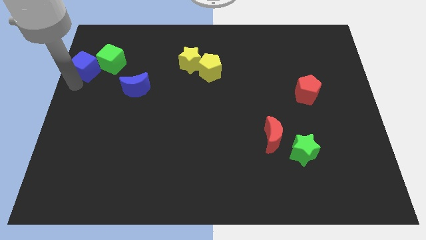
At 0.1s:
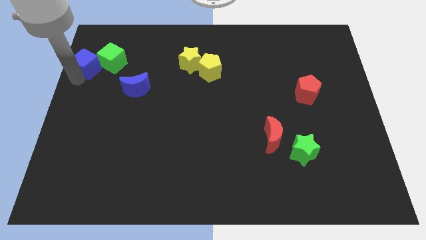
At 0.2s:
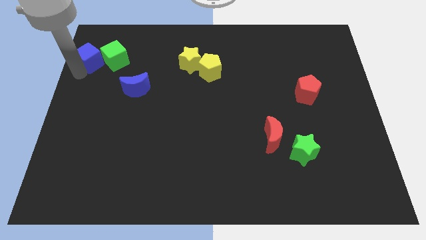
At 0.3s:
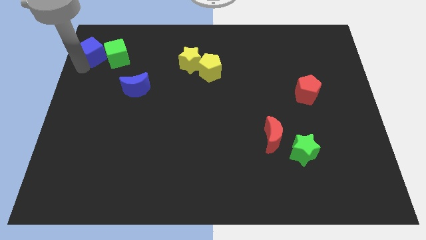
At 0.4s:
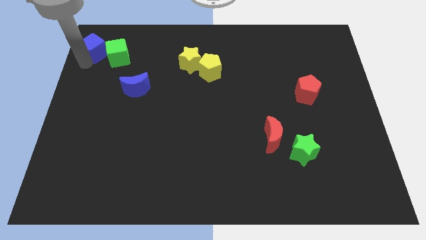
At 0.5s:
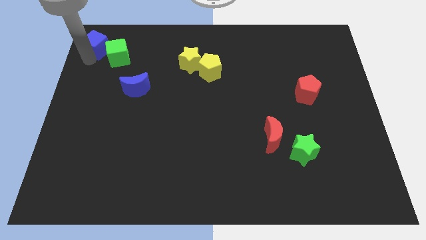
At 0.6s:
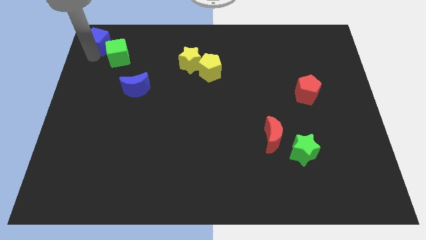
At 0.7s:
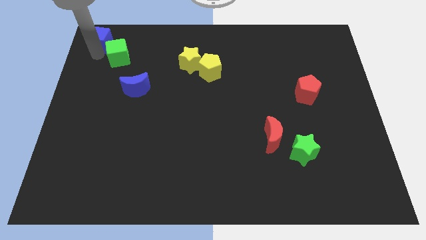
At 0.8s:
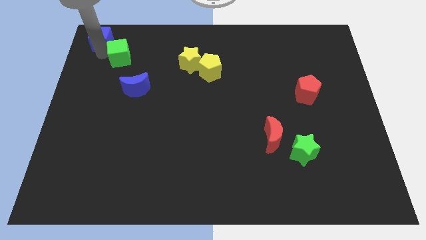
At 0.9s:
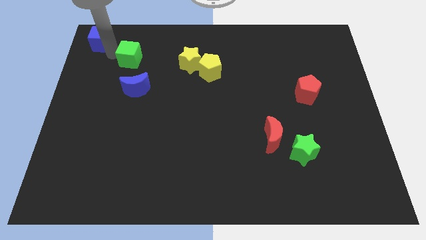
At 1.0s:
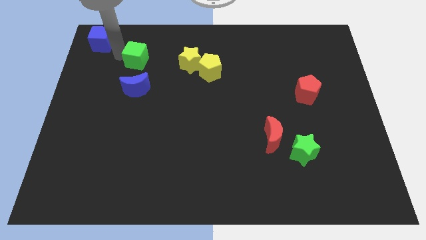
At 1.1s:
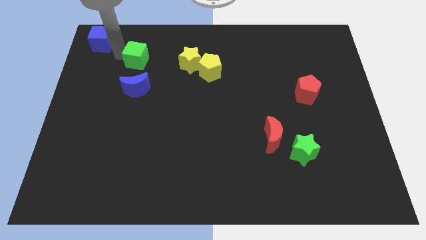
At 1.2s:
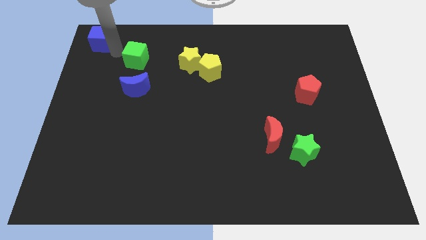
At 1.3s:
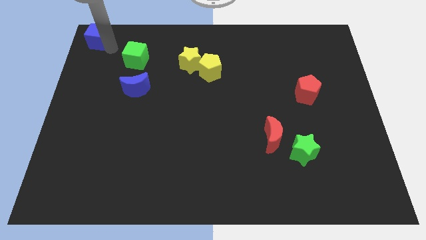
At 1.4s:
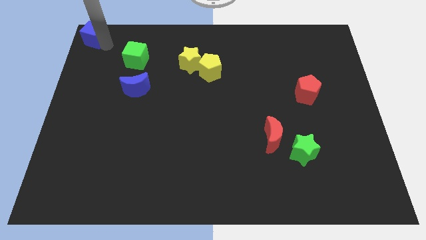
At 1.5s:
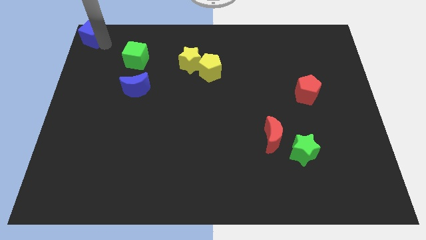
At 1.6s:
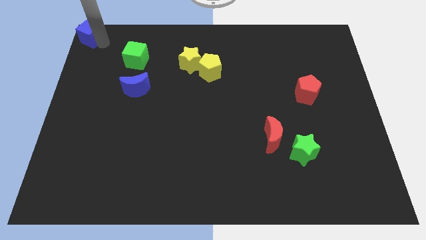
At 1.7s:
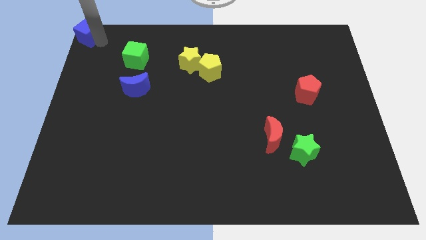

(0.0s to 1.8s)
push blue cube to the top left corner

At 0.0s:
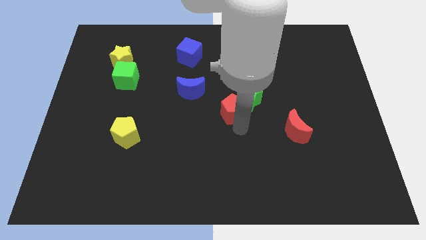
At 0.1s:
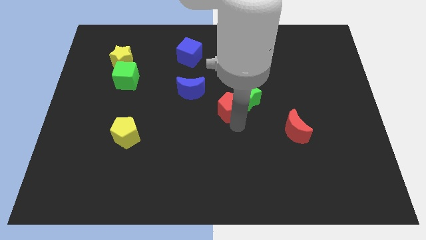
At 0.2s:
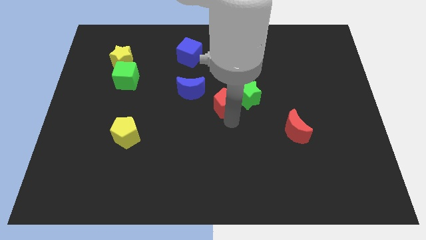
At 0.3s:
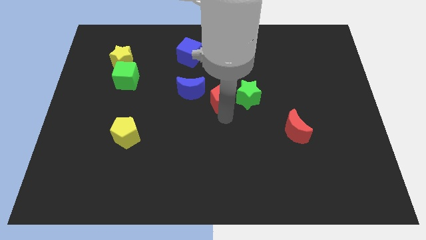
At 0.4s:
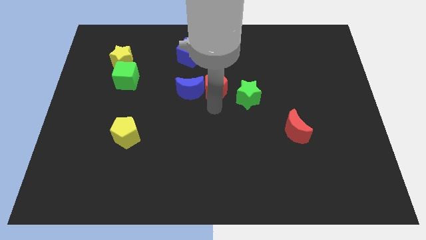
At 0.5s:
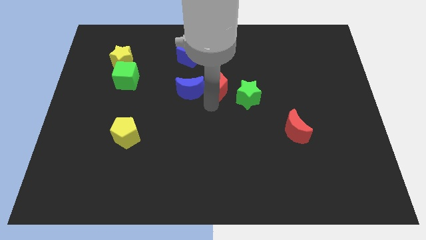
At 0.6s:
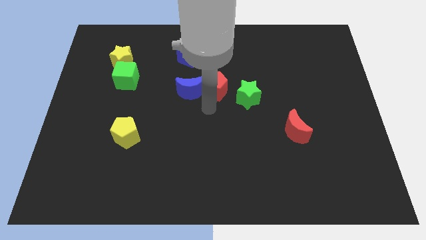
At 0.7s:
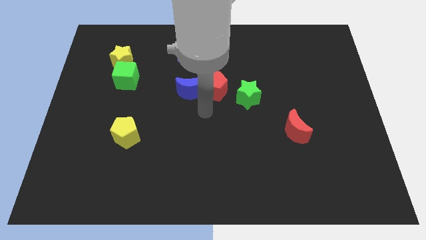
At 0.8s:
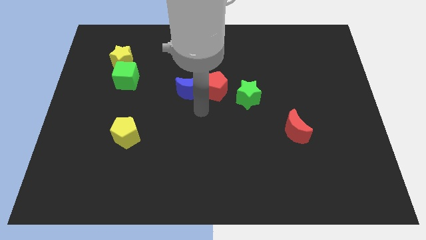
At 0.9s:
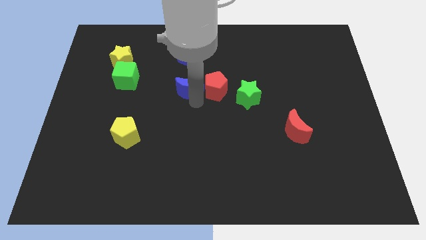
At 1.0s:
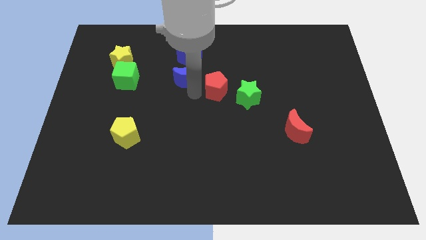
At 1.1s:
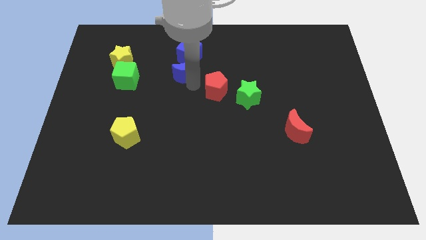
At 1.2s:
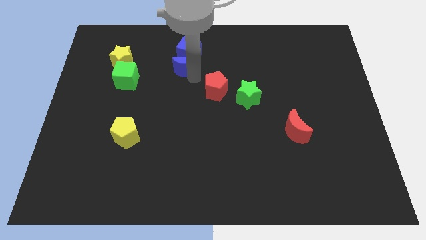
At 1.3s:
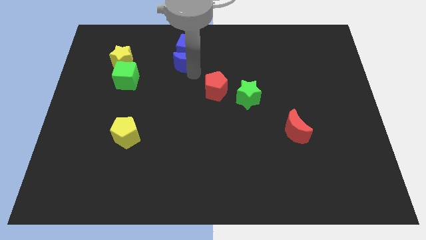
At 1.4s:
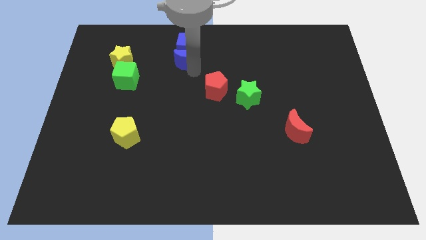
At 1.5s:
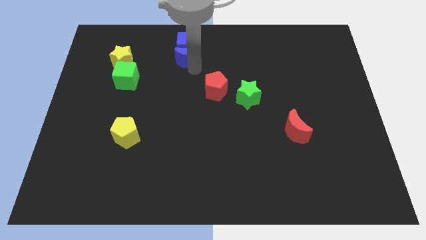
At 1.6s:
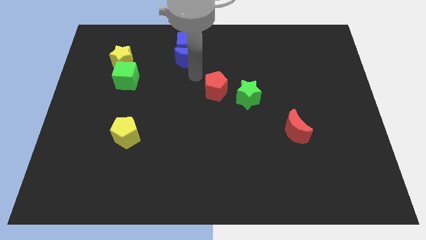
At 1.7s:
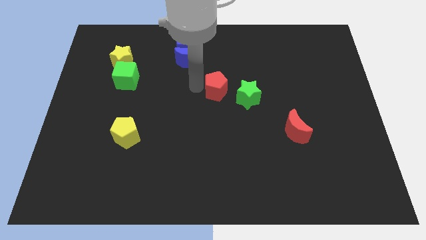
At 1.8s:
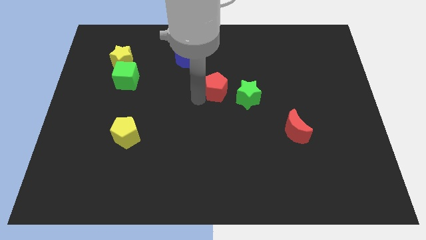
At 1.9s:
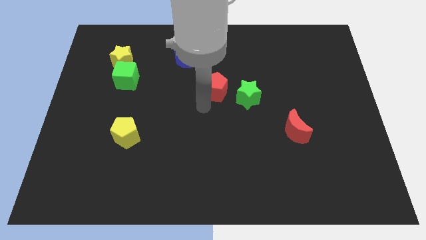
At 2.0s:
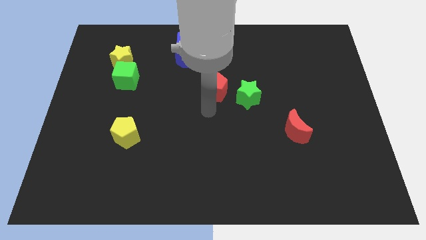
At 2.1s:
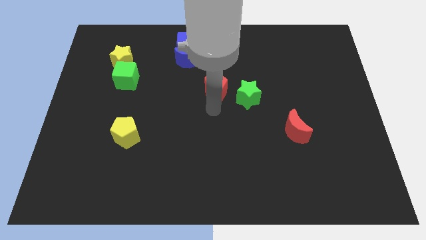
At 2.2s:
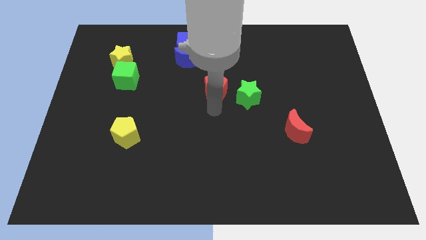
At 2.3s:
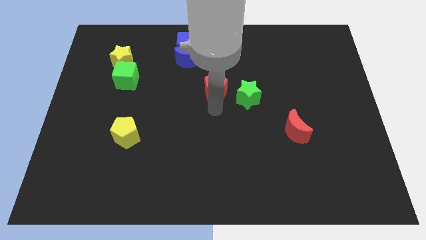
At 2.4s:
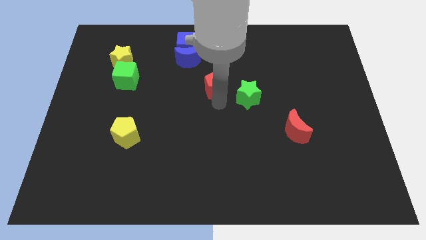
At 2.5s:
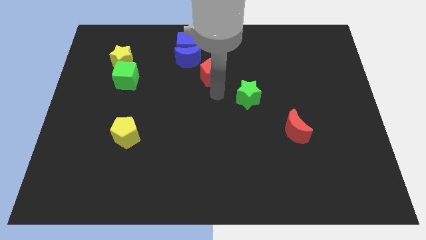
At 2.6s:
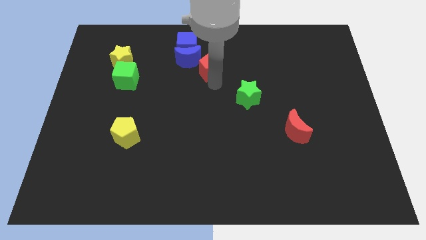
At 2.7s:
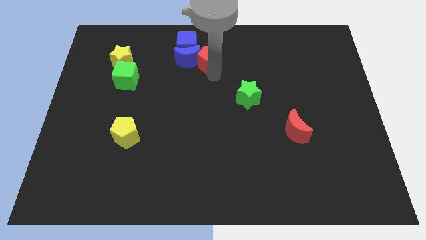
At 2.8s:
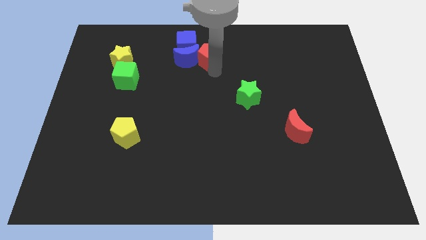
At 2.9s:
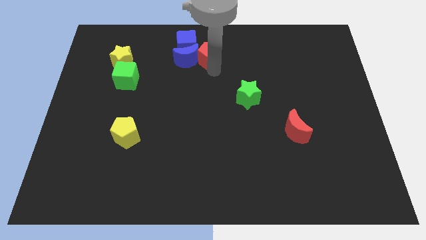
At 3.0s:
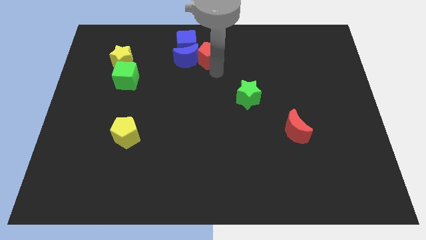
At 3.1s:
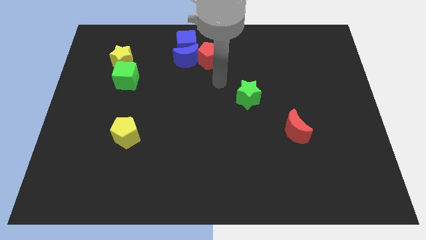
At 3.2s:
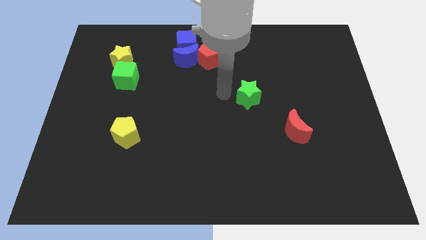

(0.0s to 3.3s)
push the blue moon and red pentagon in the blue cube

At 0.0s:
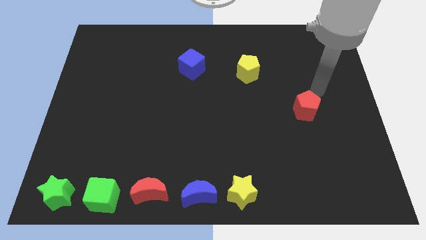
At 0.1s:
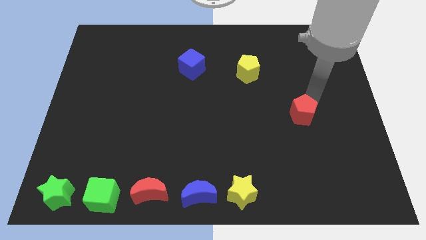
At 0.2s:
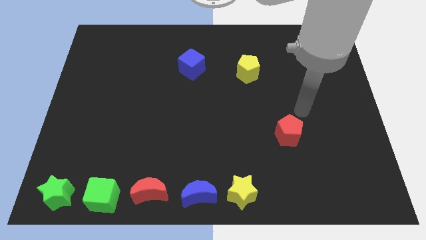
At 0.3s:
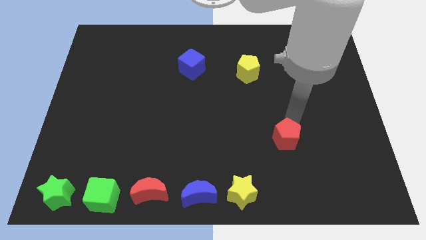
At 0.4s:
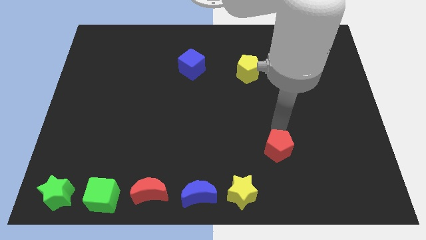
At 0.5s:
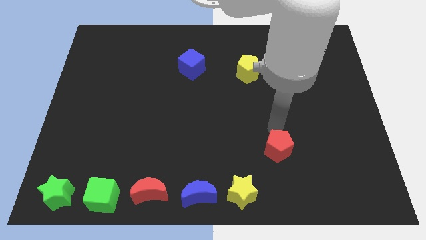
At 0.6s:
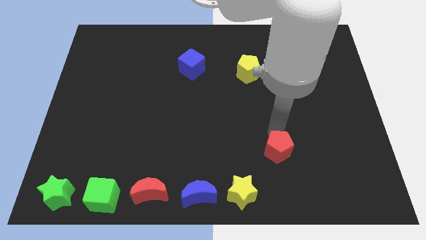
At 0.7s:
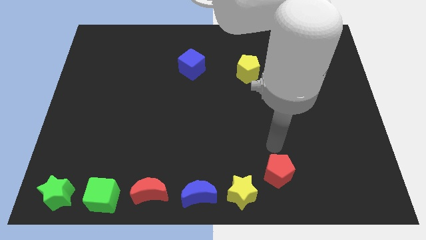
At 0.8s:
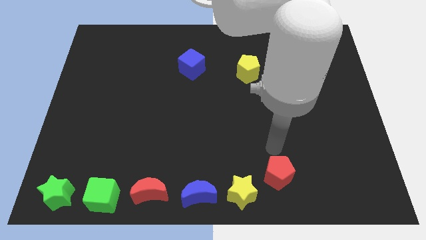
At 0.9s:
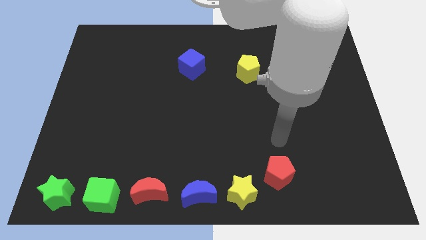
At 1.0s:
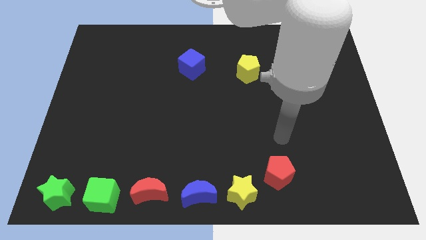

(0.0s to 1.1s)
move the red pentagon opposite to the yellow star

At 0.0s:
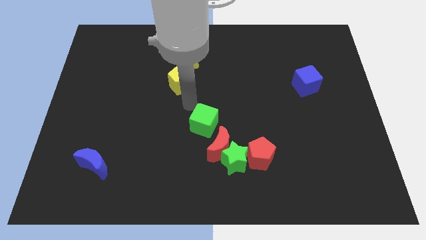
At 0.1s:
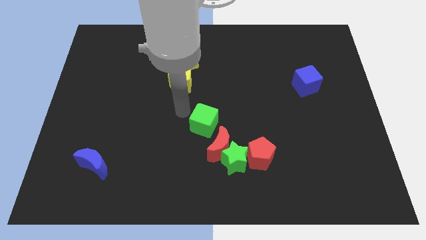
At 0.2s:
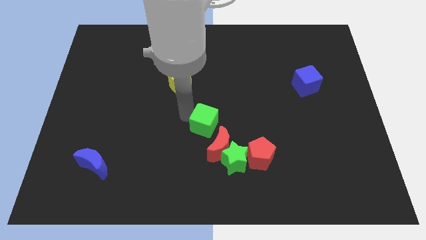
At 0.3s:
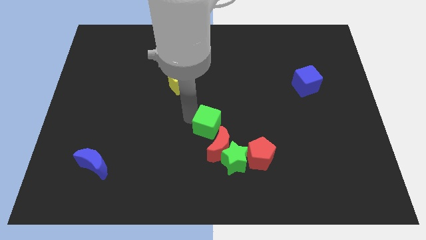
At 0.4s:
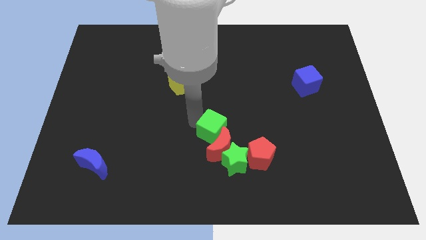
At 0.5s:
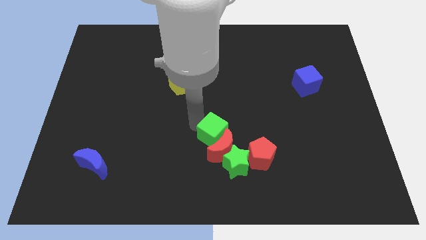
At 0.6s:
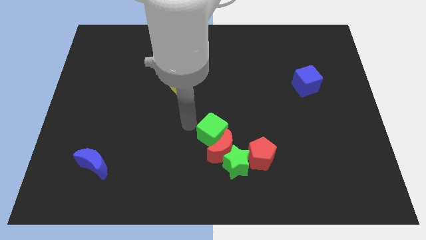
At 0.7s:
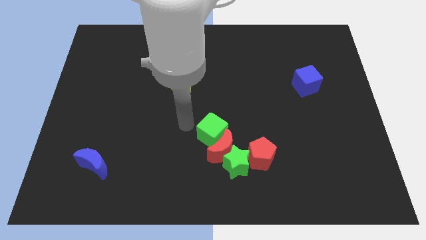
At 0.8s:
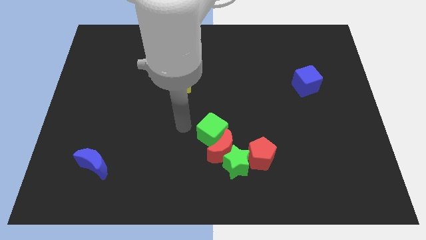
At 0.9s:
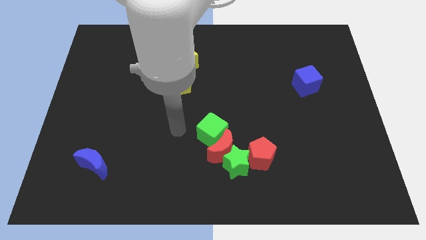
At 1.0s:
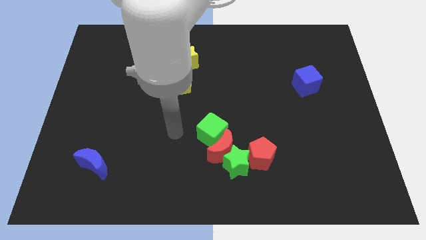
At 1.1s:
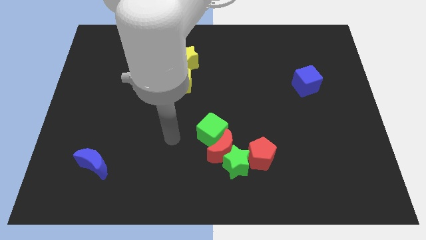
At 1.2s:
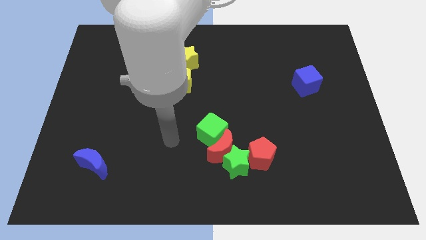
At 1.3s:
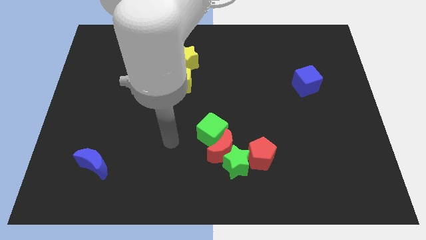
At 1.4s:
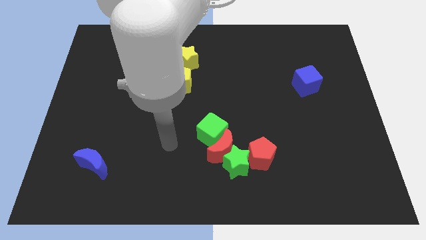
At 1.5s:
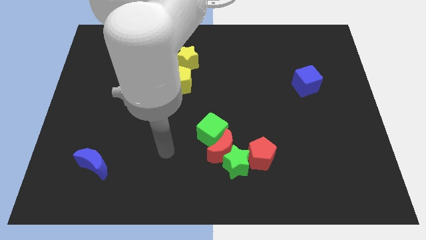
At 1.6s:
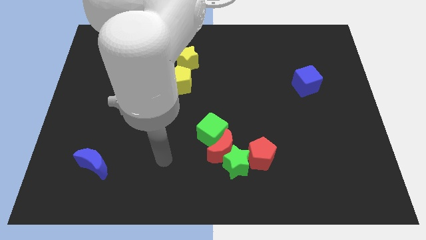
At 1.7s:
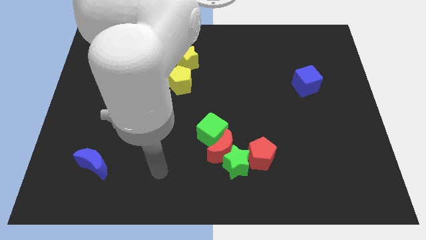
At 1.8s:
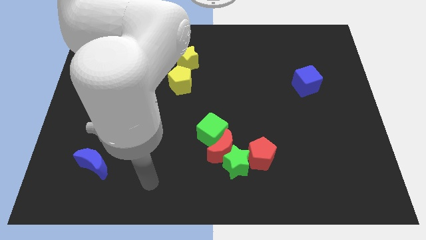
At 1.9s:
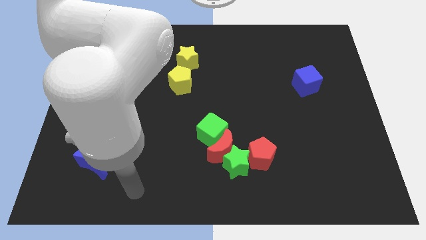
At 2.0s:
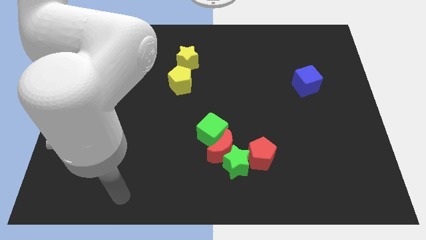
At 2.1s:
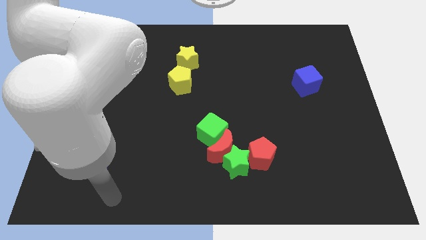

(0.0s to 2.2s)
slide the green cube into the red moon

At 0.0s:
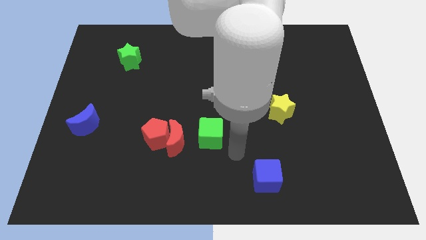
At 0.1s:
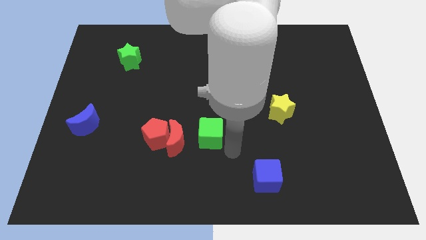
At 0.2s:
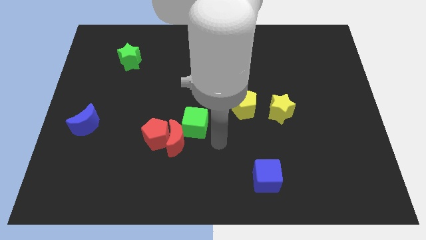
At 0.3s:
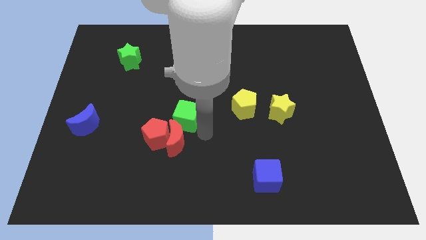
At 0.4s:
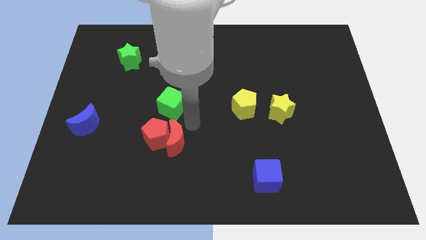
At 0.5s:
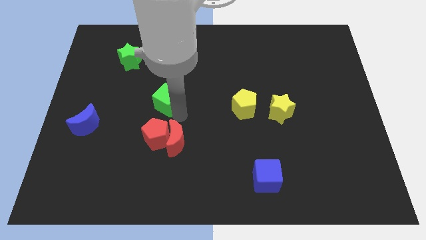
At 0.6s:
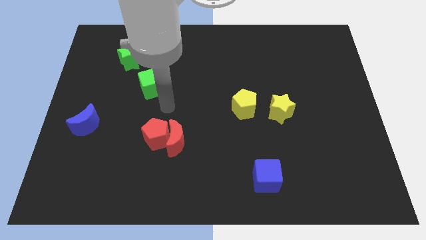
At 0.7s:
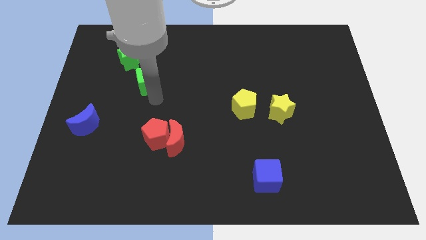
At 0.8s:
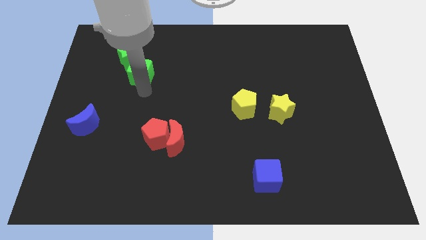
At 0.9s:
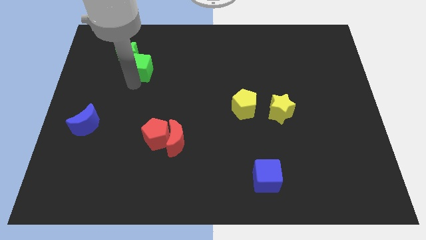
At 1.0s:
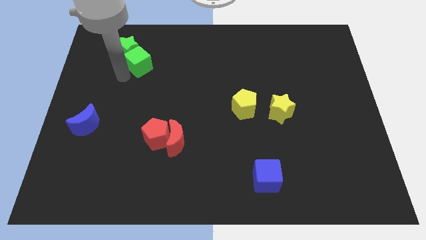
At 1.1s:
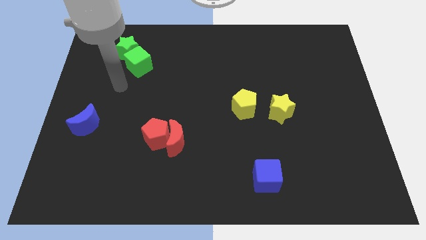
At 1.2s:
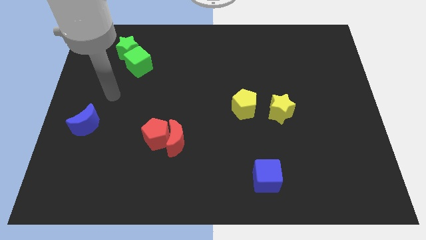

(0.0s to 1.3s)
push the green cube into green star
